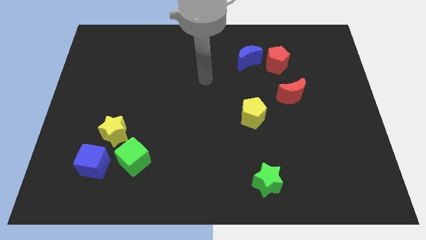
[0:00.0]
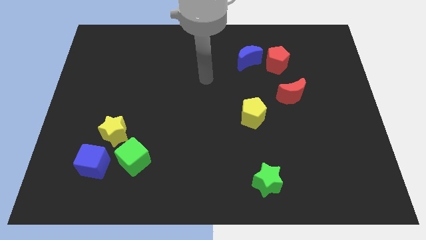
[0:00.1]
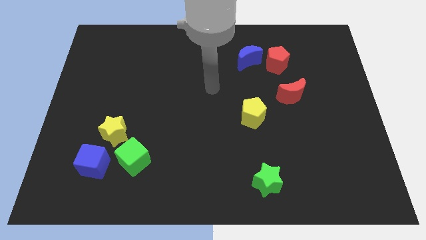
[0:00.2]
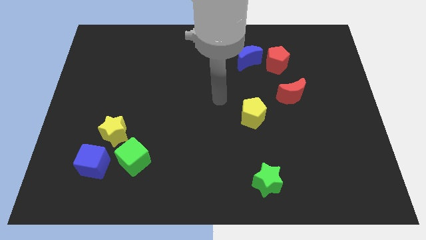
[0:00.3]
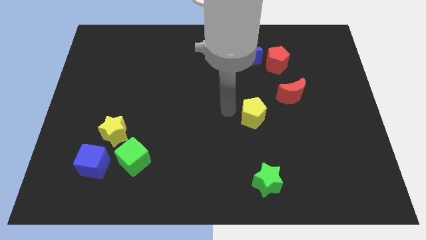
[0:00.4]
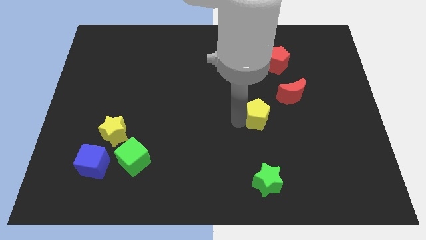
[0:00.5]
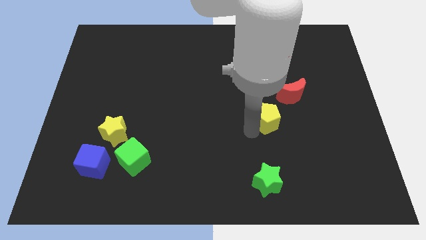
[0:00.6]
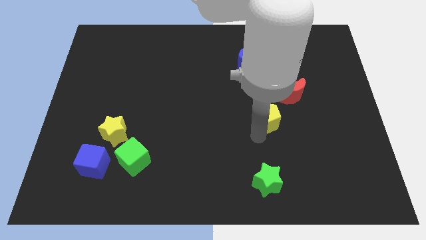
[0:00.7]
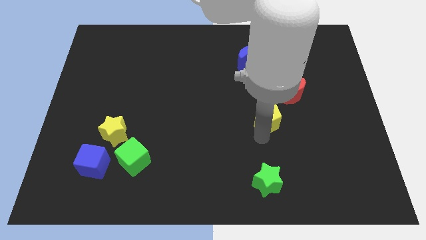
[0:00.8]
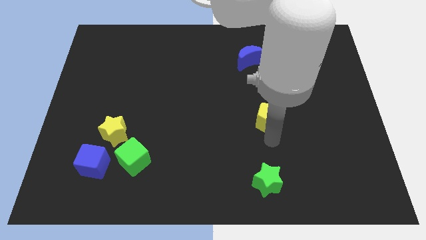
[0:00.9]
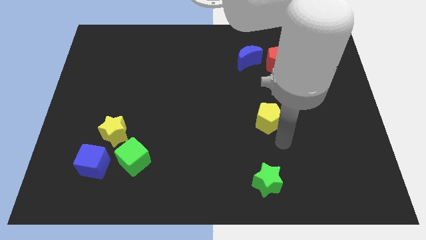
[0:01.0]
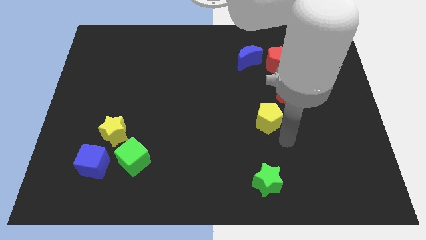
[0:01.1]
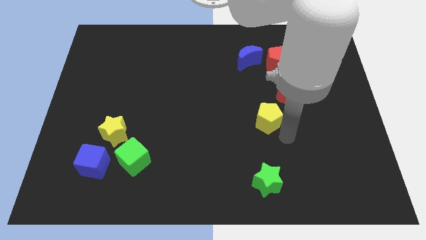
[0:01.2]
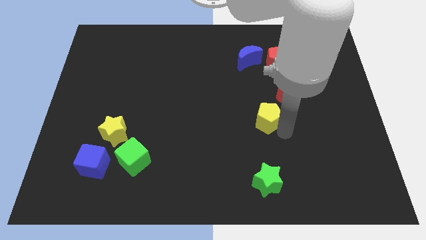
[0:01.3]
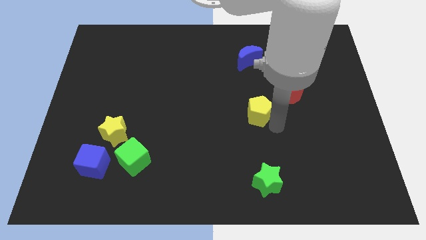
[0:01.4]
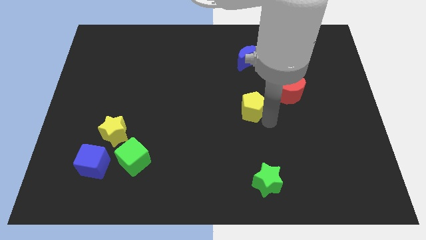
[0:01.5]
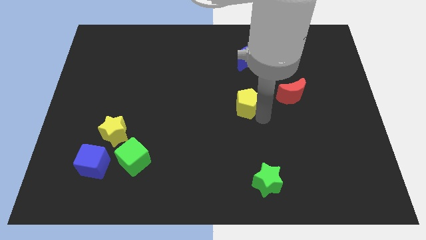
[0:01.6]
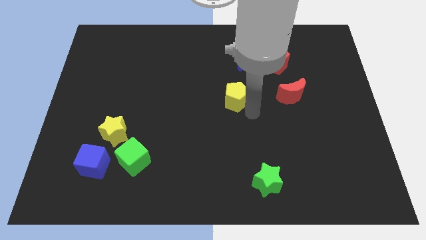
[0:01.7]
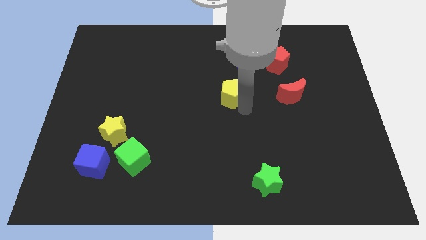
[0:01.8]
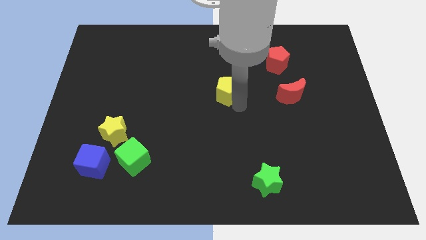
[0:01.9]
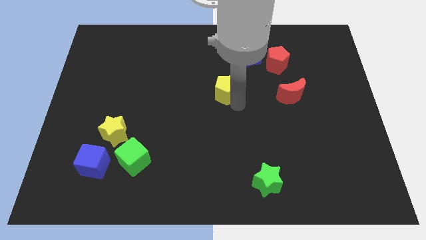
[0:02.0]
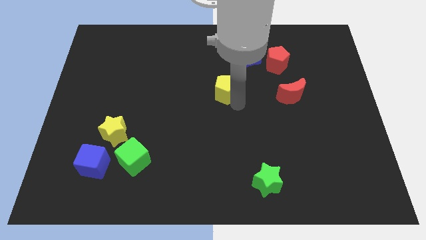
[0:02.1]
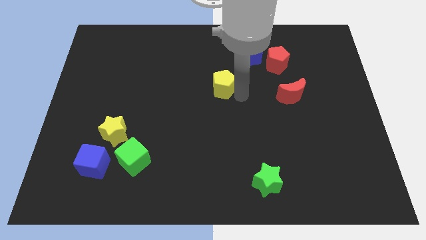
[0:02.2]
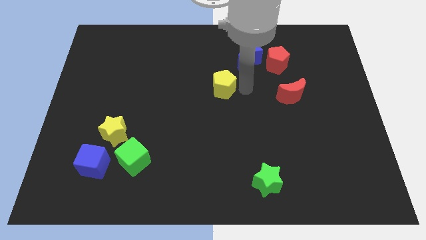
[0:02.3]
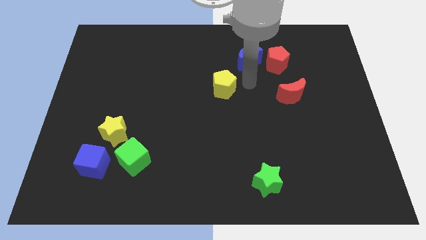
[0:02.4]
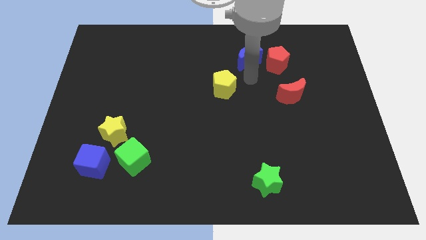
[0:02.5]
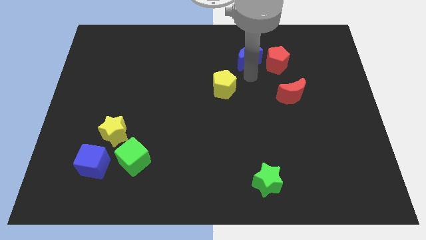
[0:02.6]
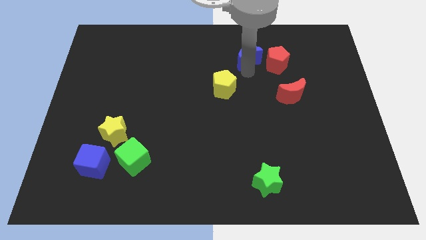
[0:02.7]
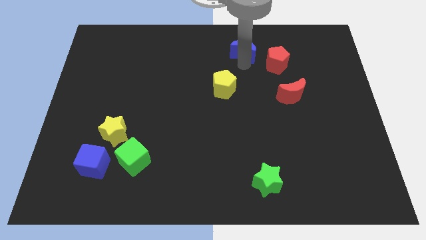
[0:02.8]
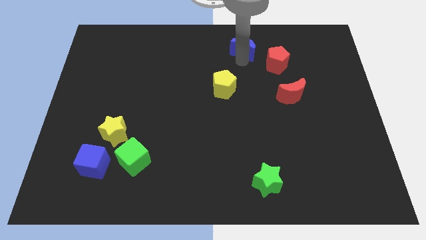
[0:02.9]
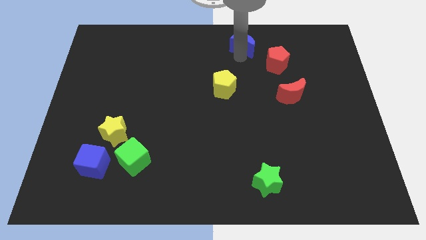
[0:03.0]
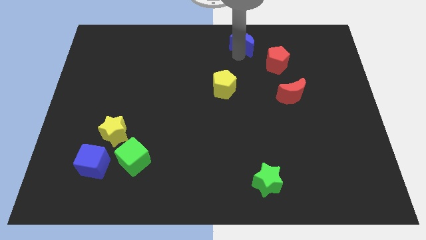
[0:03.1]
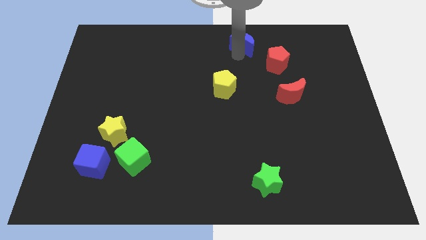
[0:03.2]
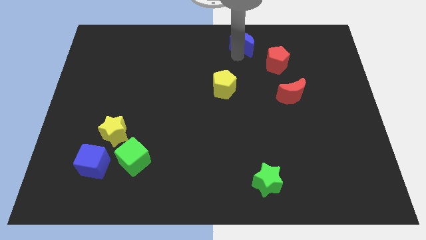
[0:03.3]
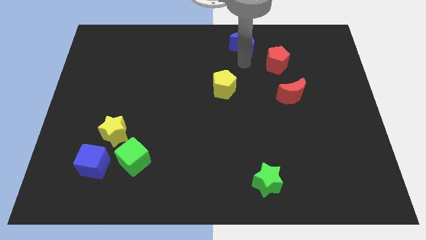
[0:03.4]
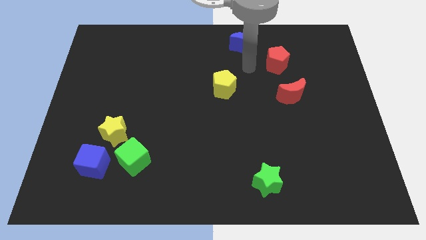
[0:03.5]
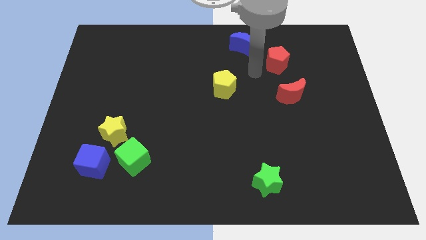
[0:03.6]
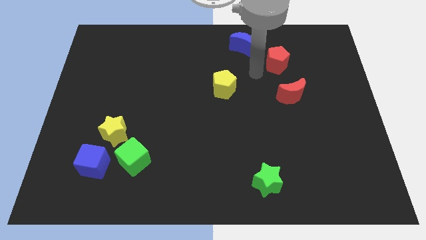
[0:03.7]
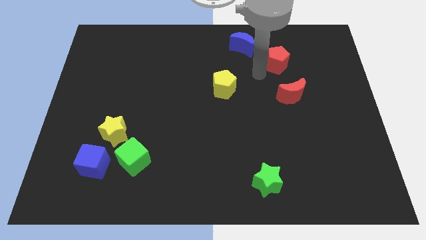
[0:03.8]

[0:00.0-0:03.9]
place the yellow pentagon and blue moon diagonal to each other

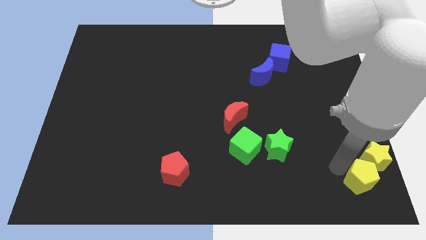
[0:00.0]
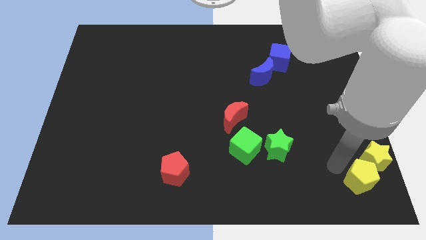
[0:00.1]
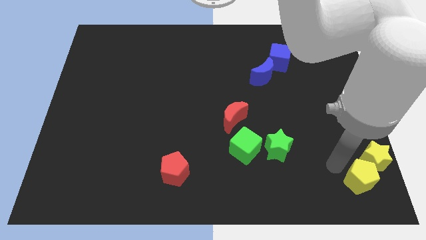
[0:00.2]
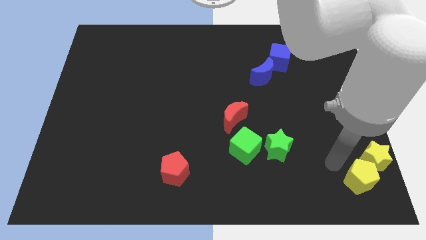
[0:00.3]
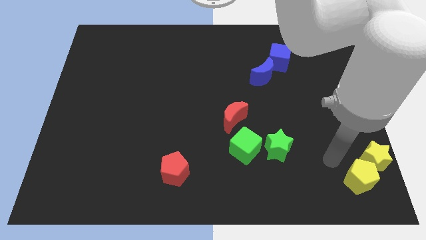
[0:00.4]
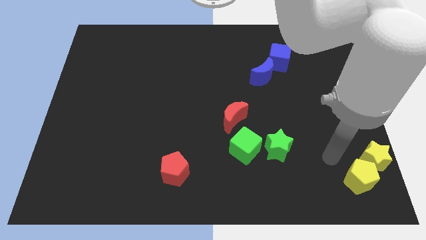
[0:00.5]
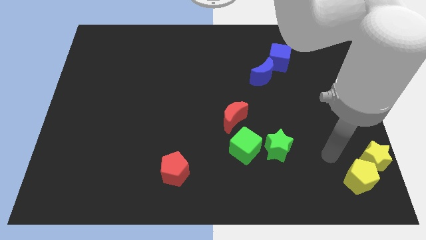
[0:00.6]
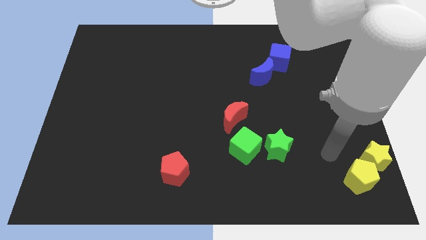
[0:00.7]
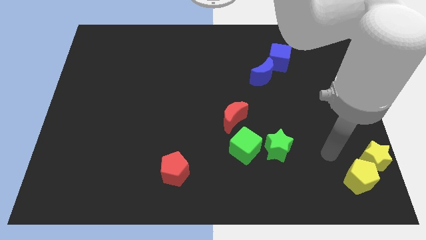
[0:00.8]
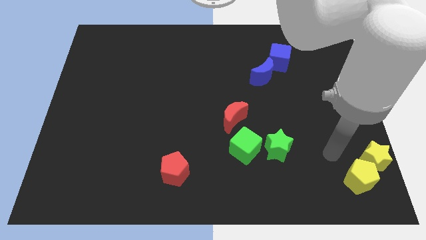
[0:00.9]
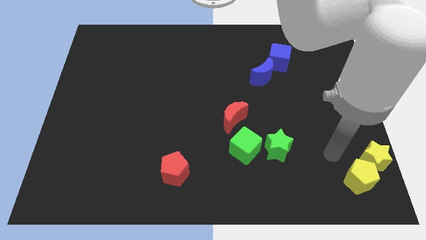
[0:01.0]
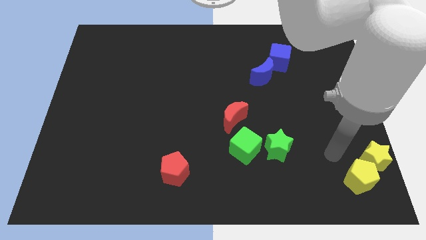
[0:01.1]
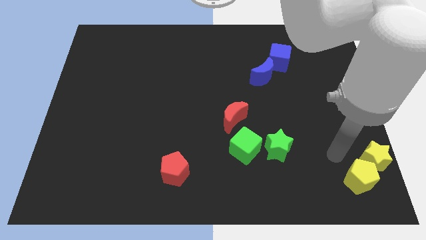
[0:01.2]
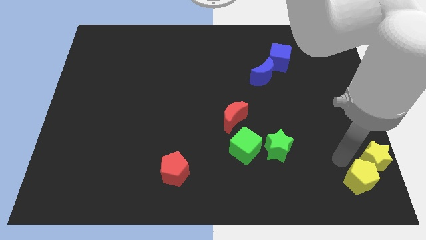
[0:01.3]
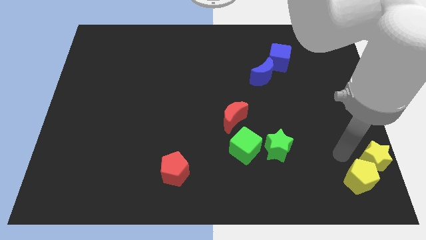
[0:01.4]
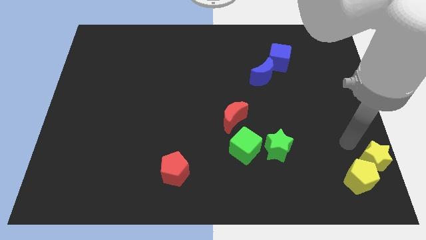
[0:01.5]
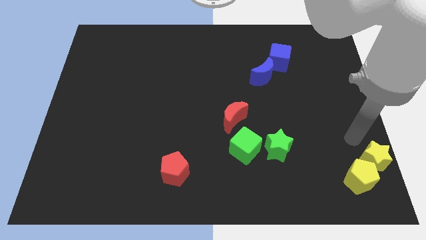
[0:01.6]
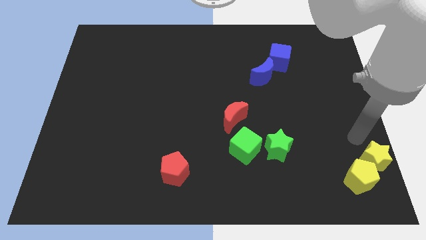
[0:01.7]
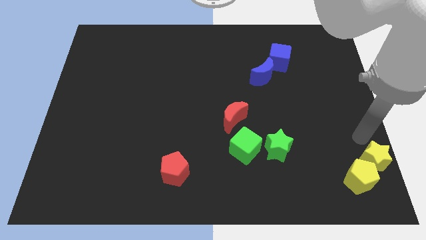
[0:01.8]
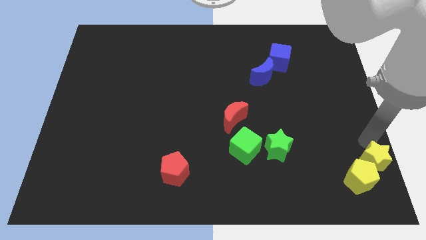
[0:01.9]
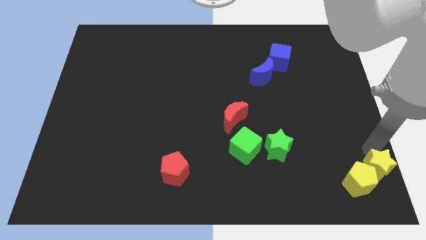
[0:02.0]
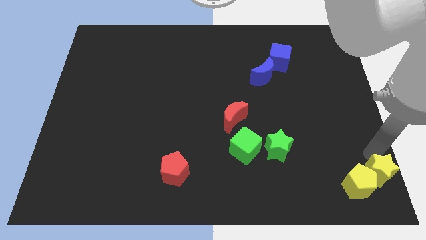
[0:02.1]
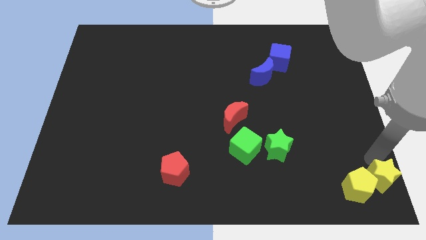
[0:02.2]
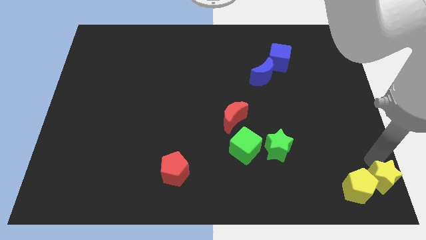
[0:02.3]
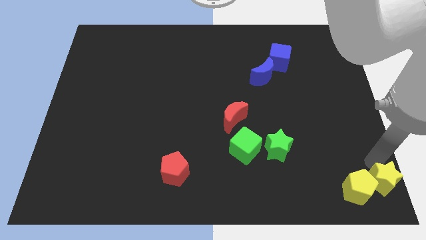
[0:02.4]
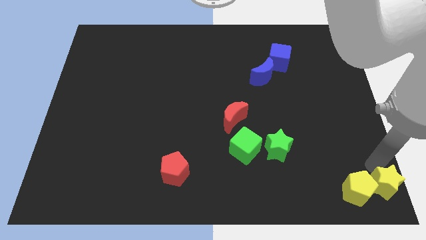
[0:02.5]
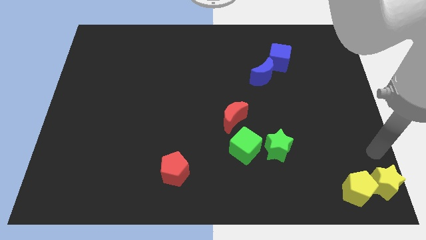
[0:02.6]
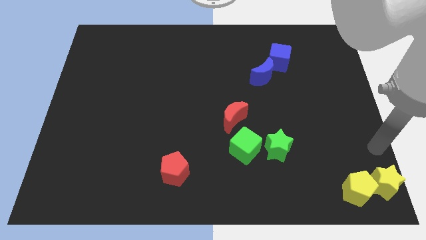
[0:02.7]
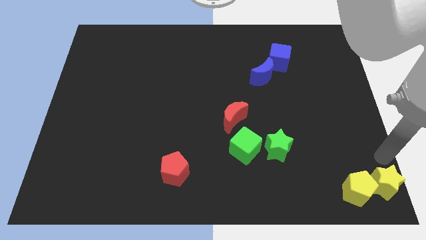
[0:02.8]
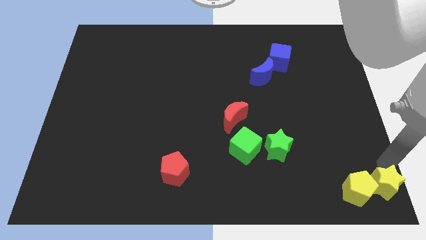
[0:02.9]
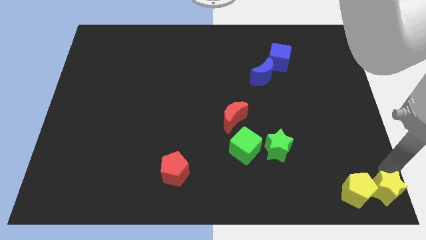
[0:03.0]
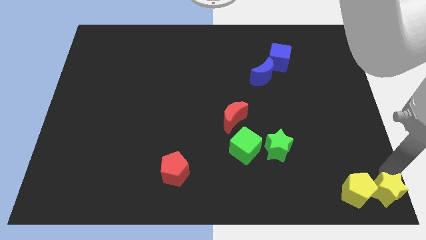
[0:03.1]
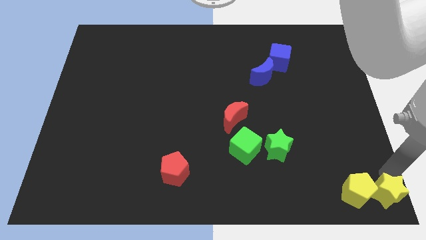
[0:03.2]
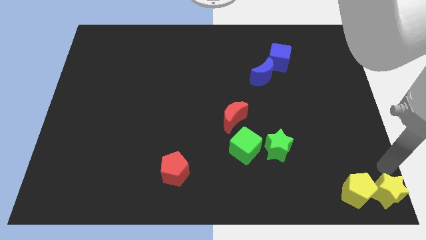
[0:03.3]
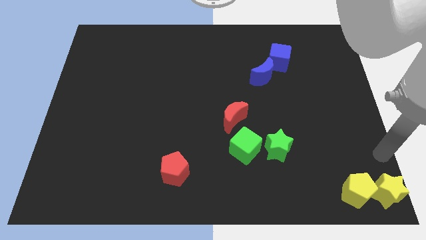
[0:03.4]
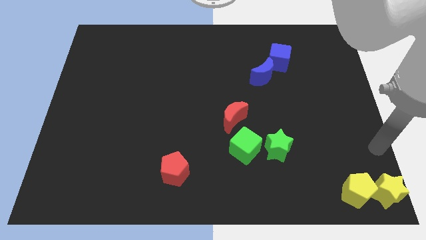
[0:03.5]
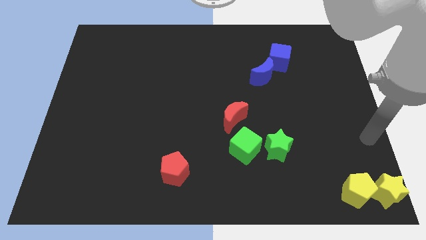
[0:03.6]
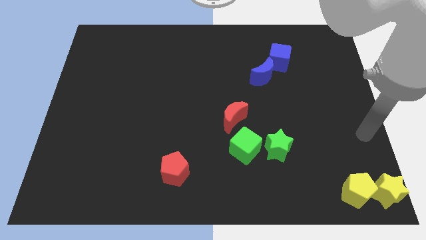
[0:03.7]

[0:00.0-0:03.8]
move the yellow star towards the bottom right of the board

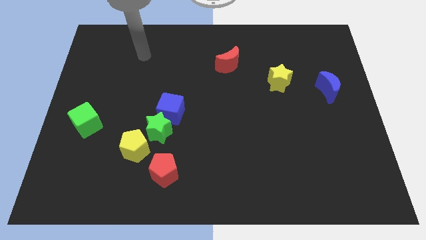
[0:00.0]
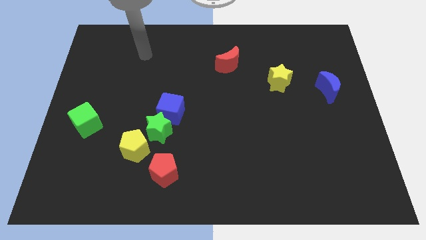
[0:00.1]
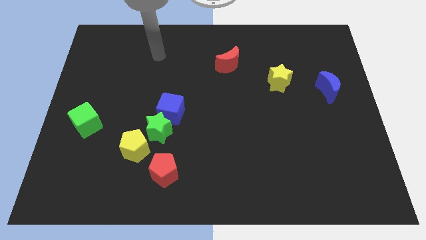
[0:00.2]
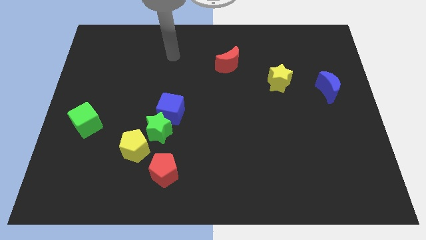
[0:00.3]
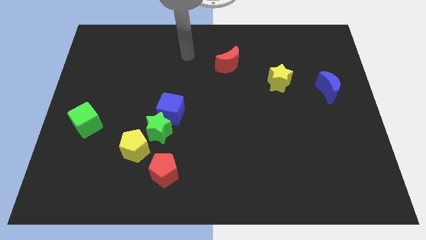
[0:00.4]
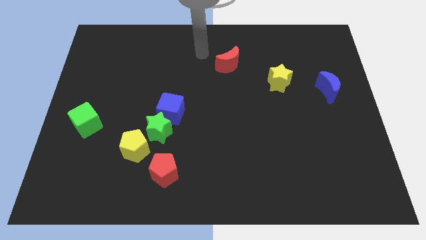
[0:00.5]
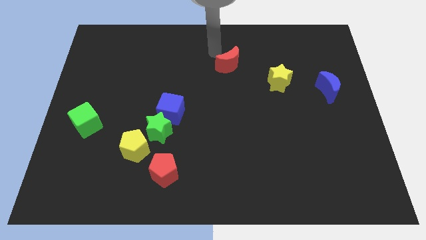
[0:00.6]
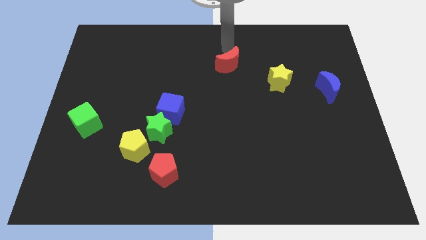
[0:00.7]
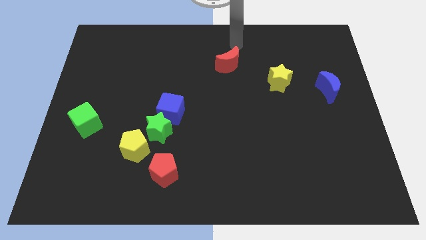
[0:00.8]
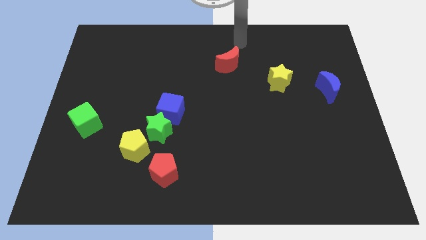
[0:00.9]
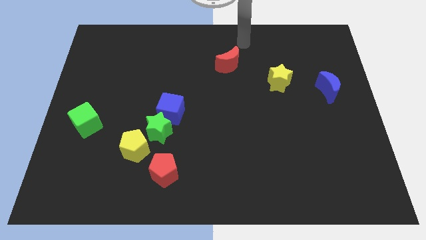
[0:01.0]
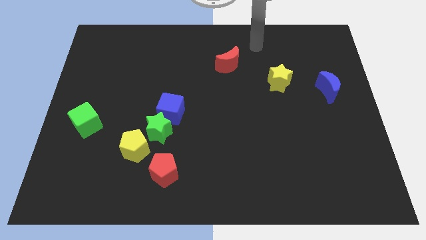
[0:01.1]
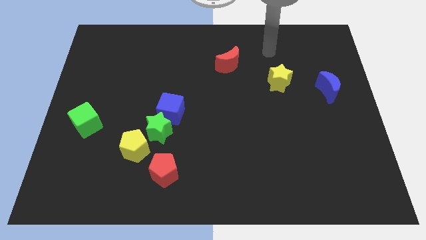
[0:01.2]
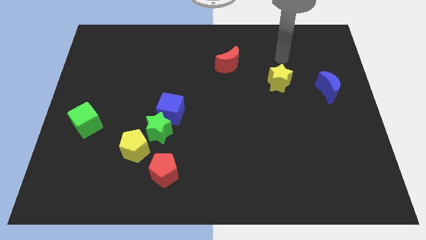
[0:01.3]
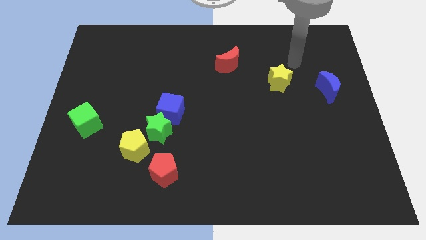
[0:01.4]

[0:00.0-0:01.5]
place your hand above the yellow star
